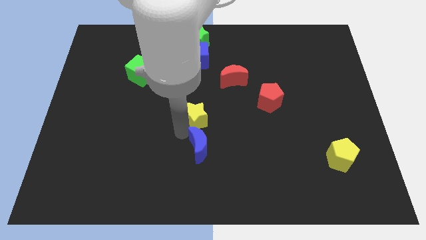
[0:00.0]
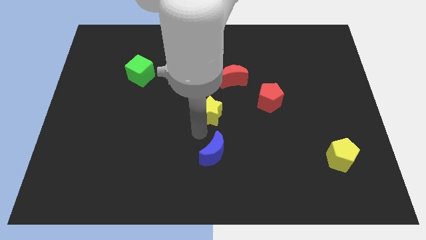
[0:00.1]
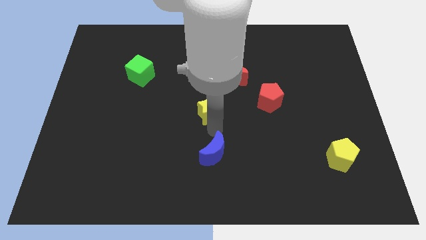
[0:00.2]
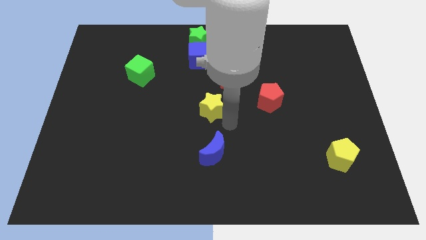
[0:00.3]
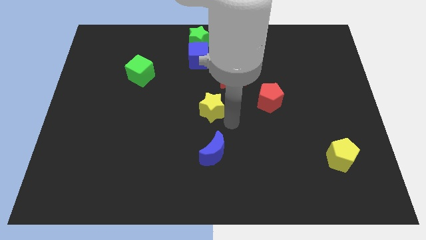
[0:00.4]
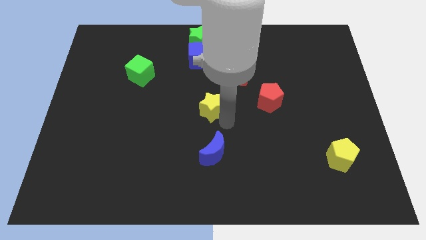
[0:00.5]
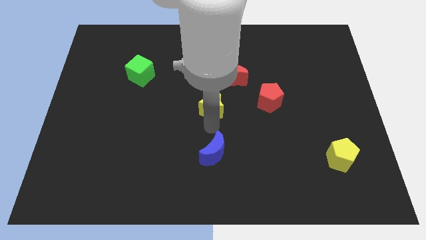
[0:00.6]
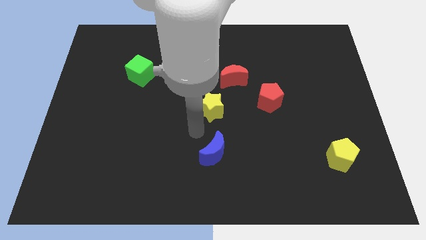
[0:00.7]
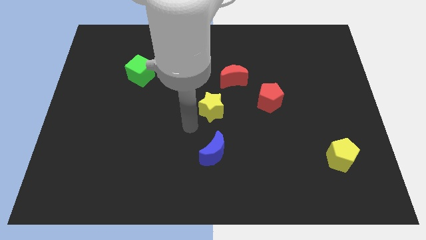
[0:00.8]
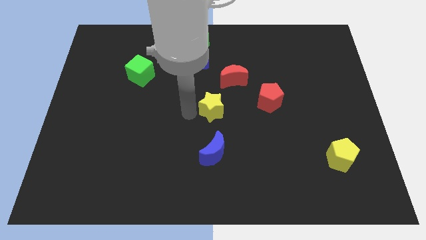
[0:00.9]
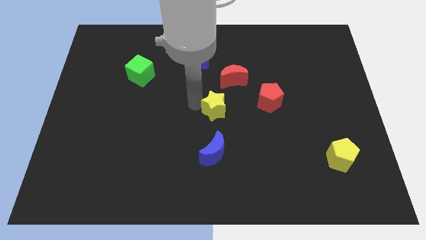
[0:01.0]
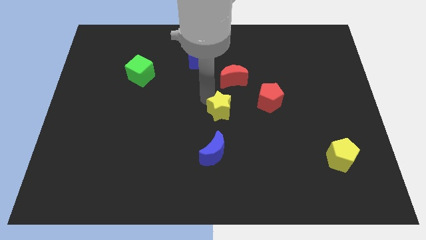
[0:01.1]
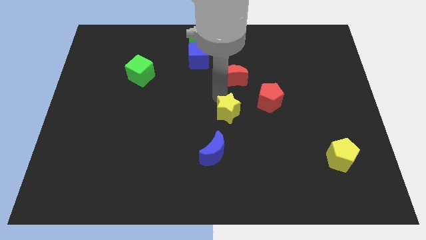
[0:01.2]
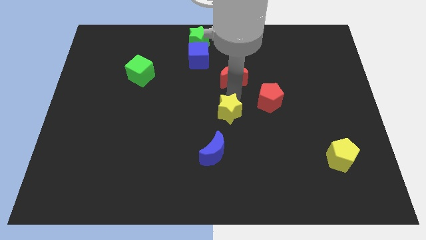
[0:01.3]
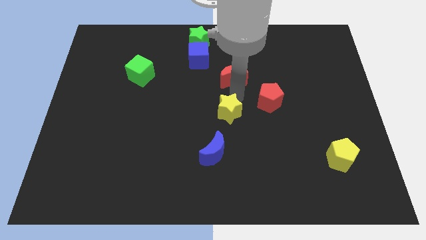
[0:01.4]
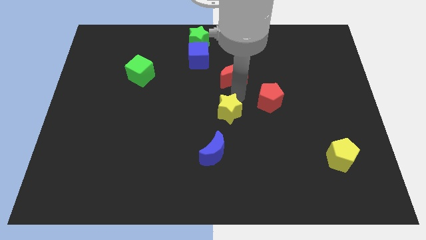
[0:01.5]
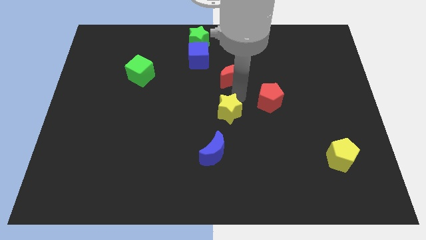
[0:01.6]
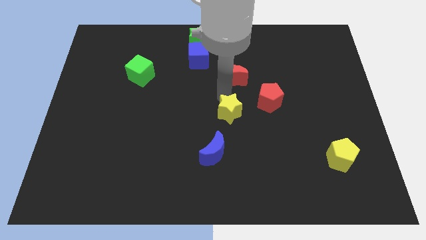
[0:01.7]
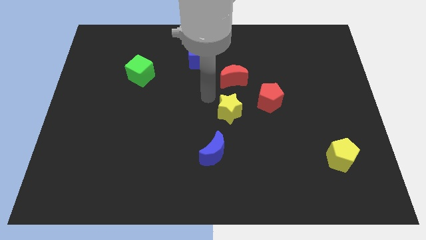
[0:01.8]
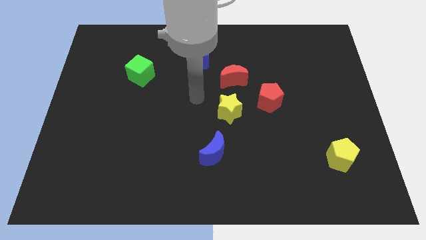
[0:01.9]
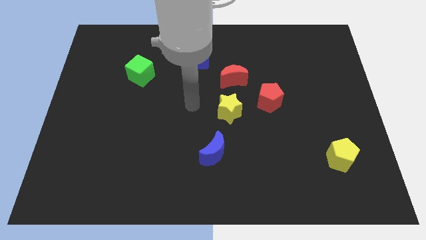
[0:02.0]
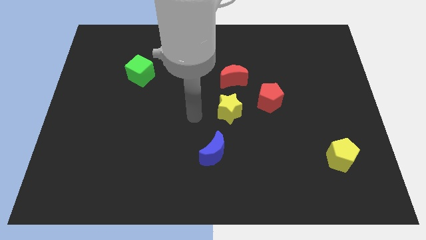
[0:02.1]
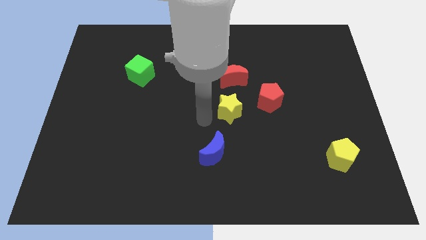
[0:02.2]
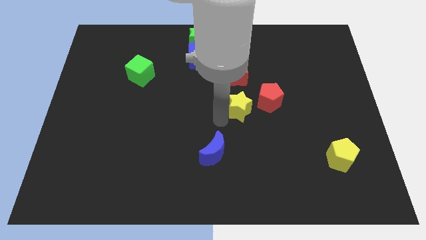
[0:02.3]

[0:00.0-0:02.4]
move the yellow star to the center

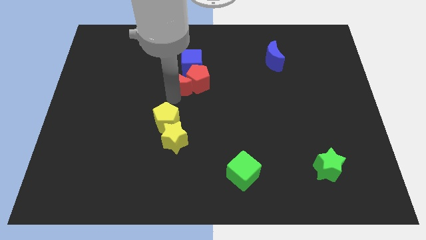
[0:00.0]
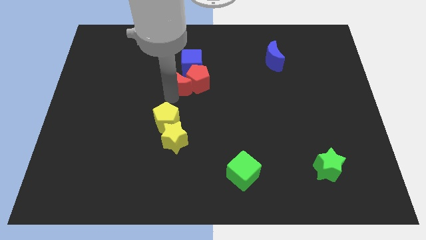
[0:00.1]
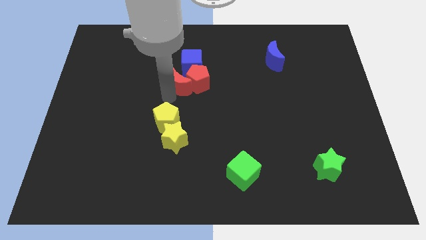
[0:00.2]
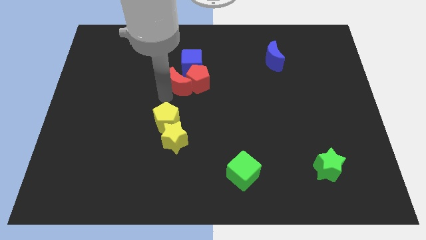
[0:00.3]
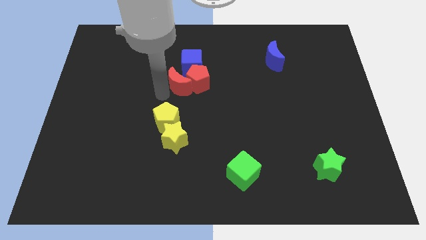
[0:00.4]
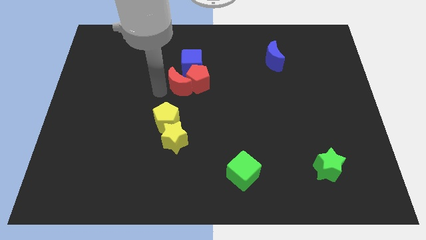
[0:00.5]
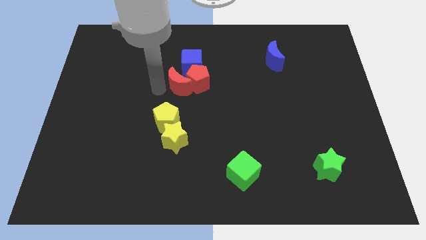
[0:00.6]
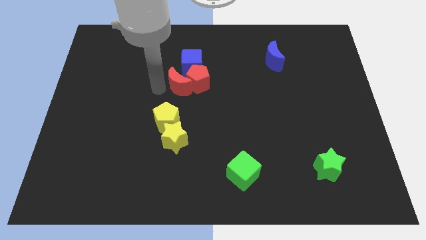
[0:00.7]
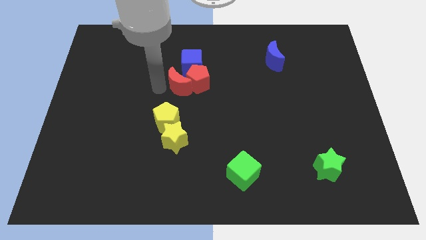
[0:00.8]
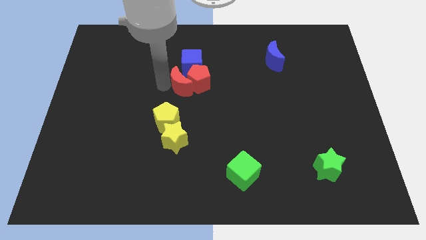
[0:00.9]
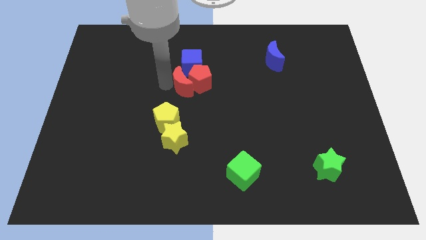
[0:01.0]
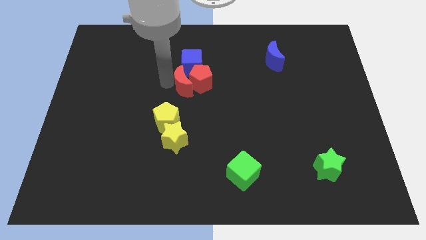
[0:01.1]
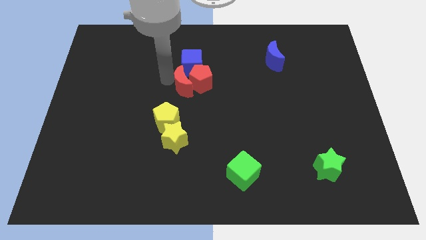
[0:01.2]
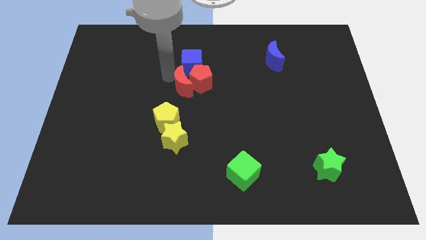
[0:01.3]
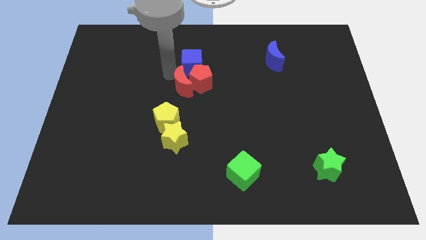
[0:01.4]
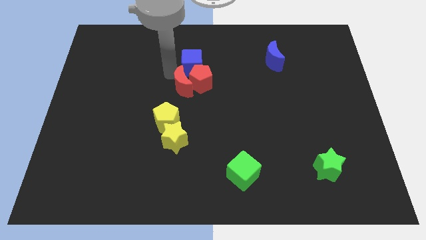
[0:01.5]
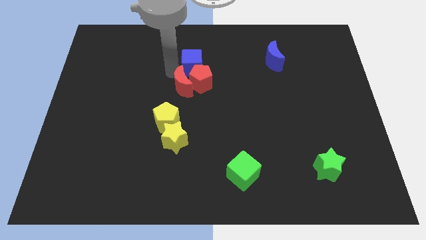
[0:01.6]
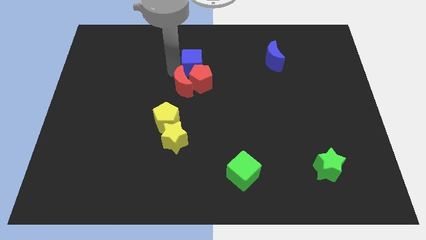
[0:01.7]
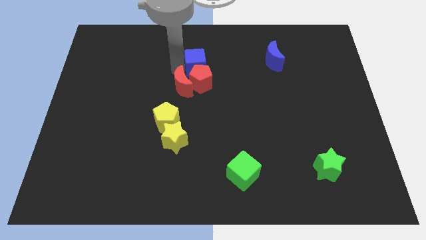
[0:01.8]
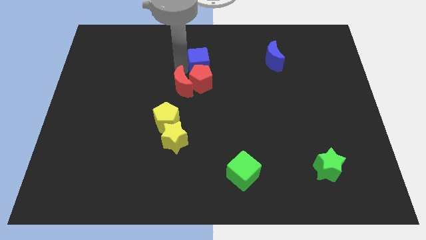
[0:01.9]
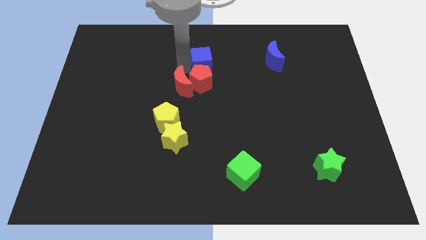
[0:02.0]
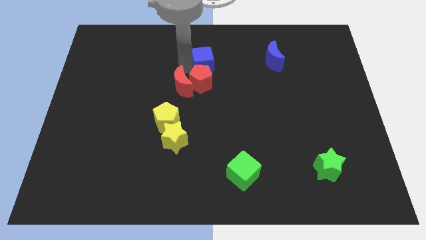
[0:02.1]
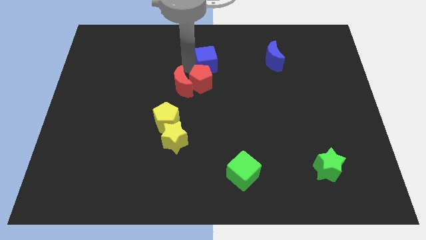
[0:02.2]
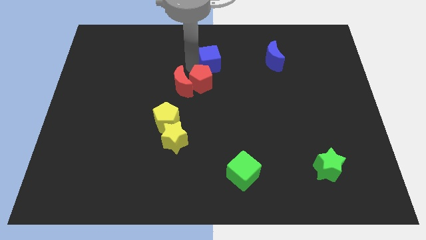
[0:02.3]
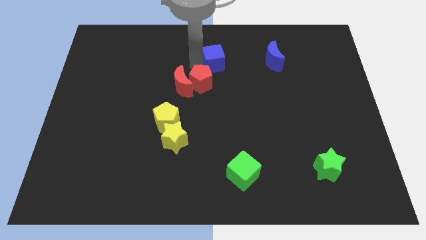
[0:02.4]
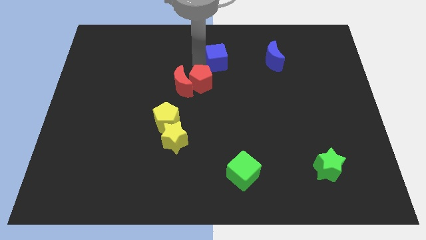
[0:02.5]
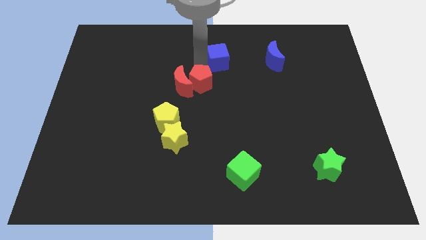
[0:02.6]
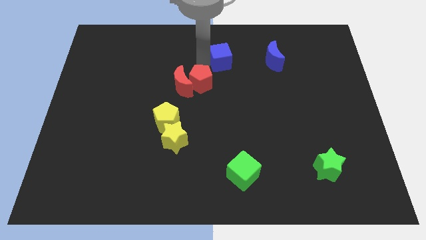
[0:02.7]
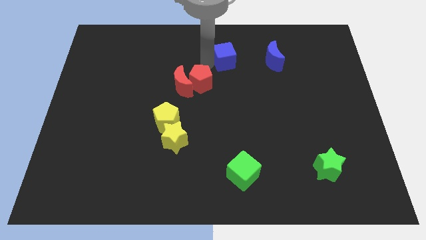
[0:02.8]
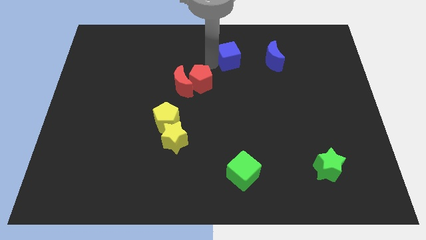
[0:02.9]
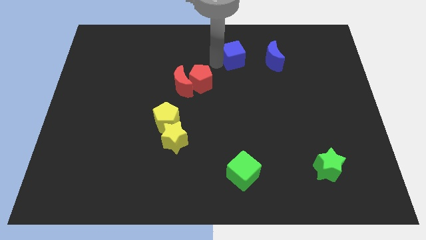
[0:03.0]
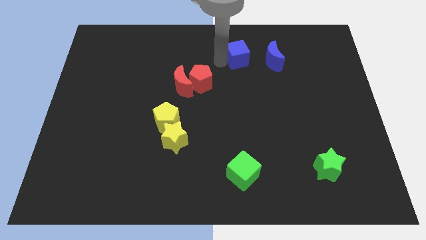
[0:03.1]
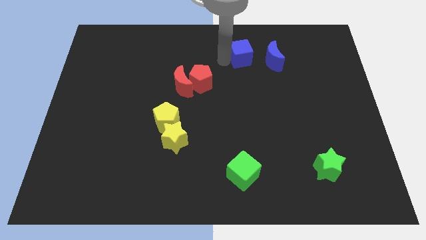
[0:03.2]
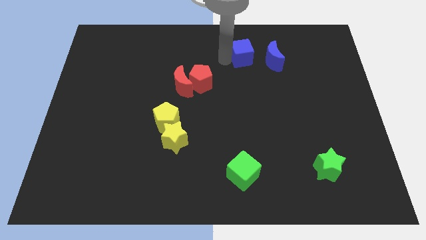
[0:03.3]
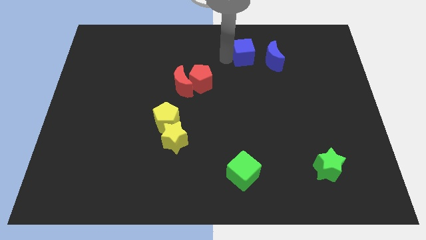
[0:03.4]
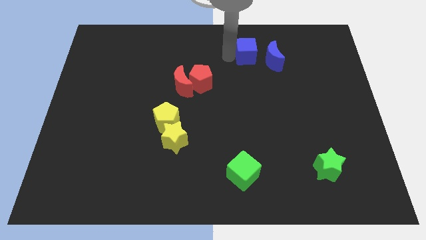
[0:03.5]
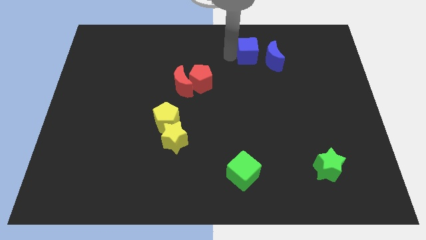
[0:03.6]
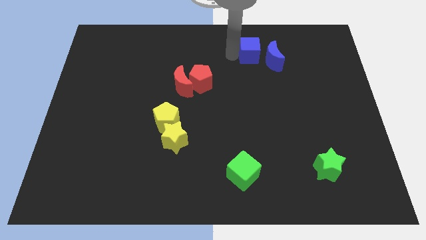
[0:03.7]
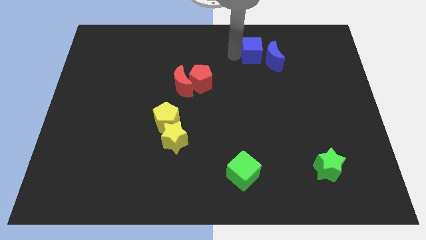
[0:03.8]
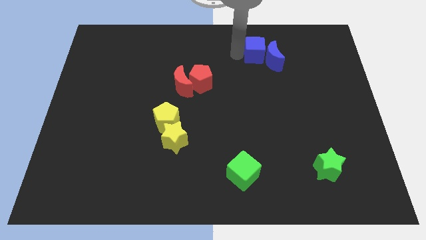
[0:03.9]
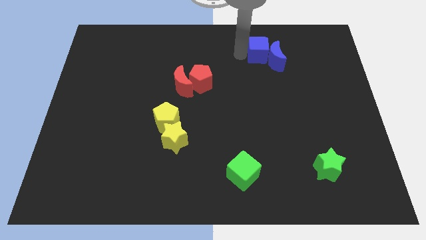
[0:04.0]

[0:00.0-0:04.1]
place the blue cube to the left side of the blue moon

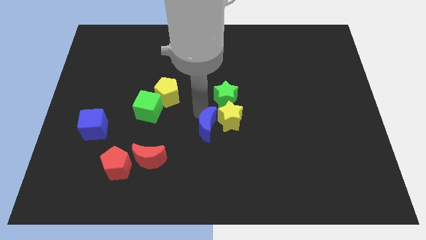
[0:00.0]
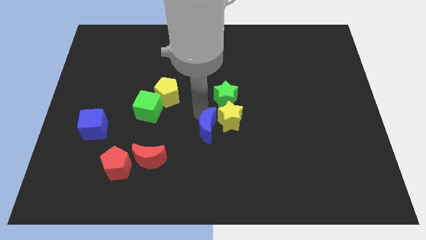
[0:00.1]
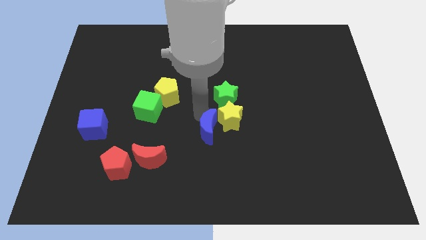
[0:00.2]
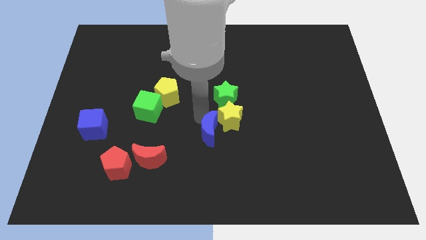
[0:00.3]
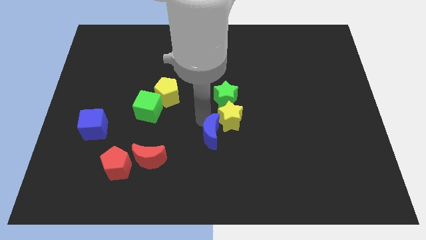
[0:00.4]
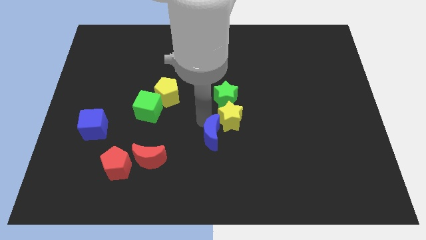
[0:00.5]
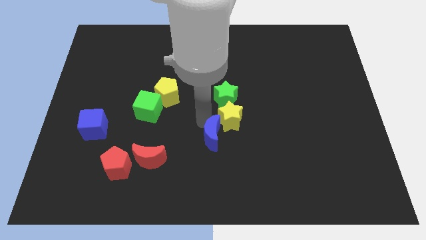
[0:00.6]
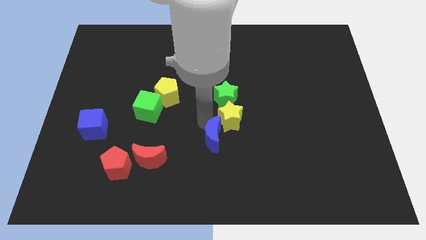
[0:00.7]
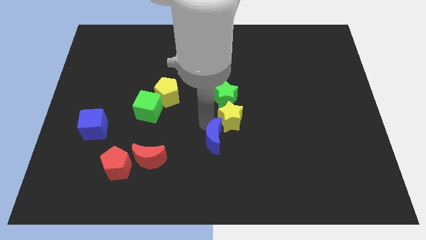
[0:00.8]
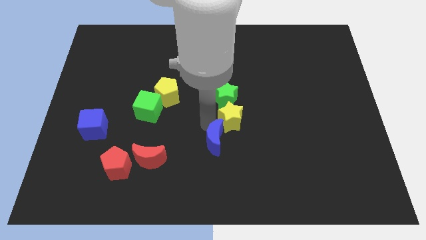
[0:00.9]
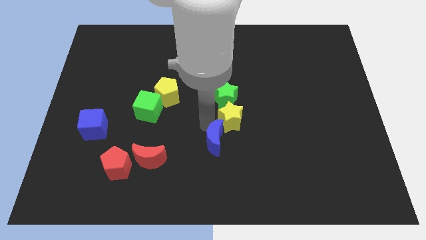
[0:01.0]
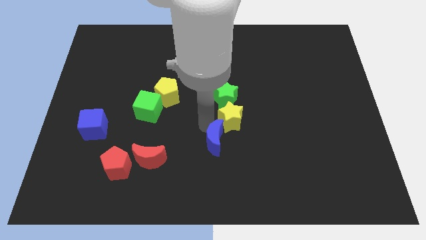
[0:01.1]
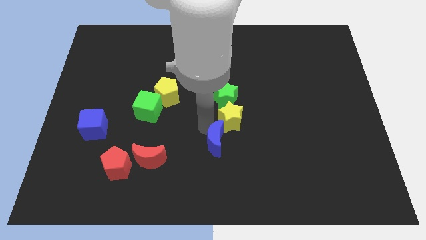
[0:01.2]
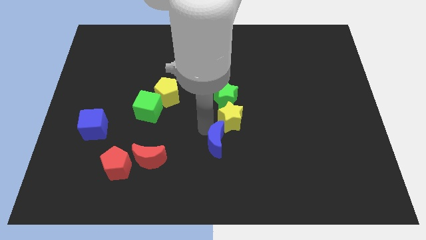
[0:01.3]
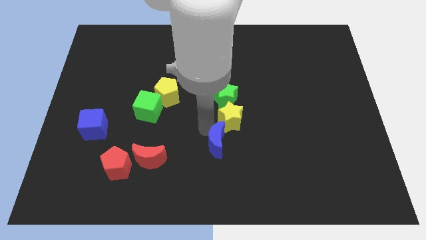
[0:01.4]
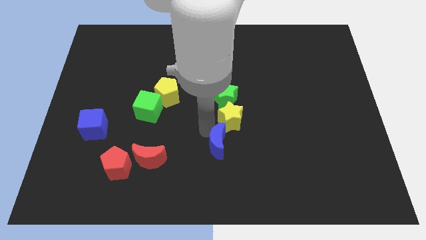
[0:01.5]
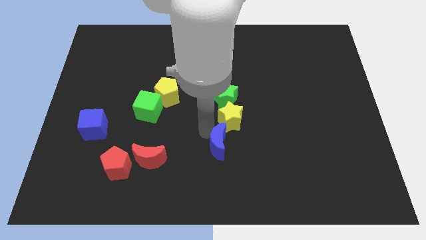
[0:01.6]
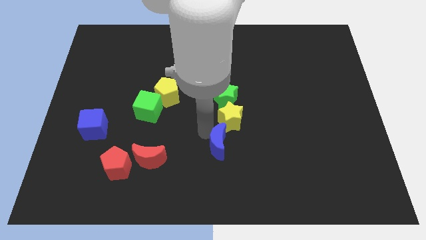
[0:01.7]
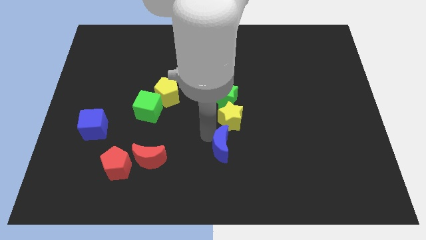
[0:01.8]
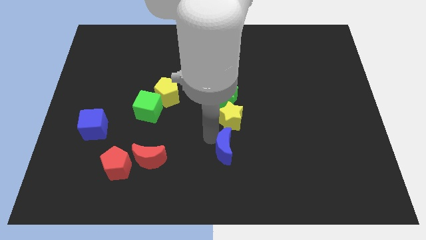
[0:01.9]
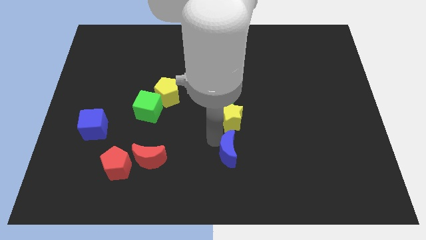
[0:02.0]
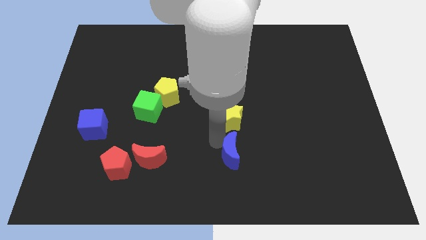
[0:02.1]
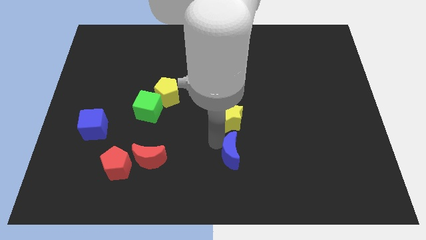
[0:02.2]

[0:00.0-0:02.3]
move the blue crescent to the bottom of the yellow star
